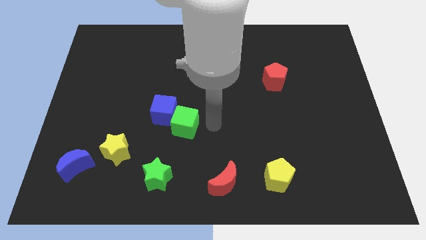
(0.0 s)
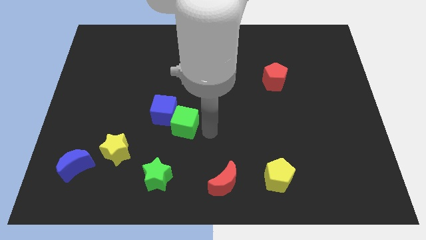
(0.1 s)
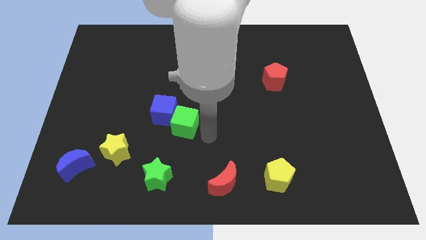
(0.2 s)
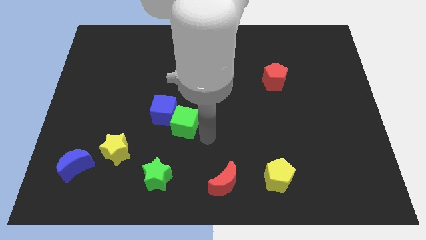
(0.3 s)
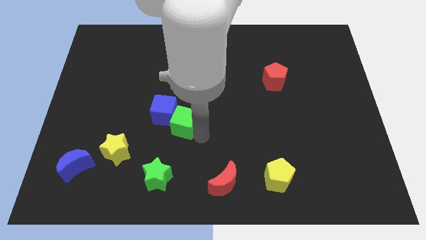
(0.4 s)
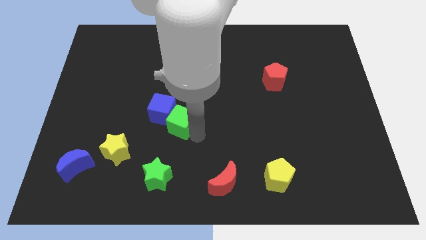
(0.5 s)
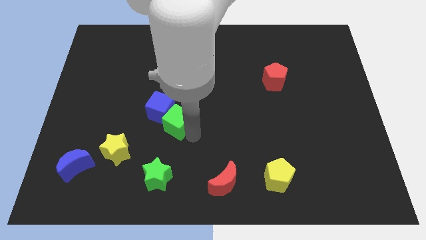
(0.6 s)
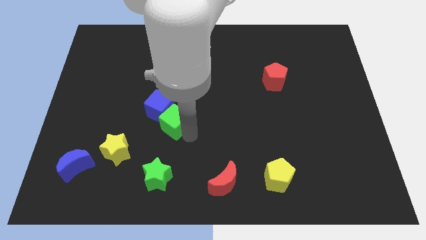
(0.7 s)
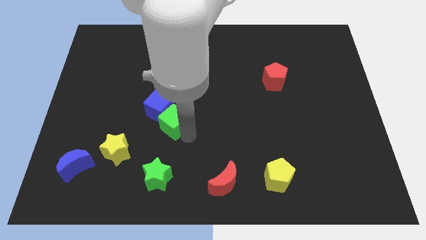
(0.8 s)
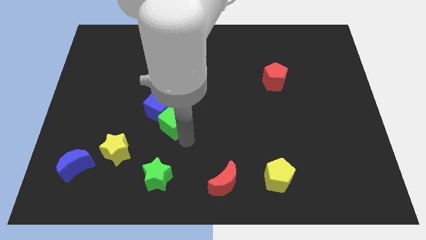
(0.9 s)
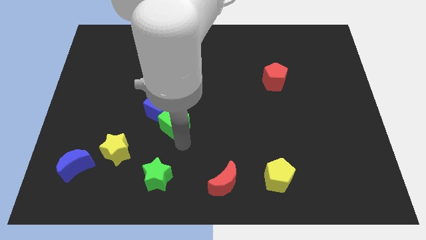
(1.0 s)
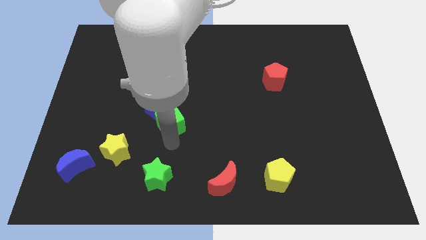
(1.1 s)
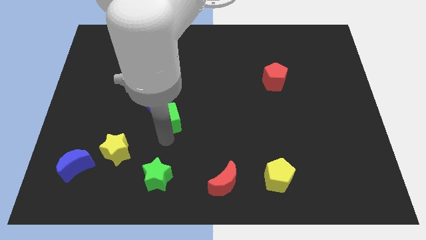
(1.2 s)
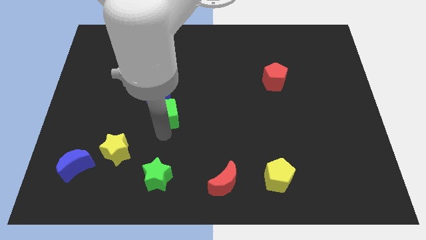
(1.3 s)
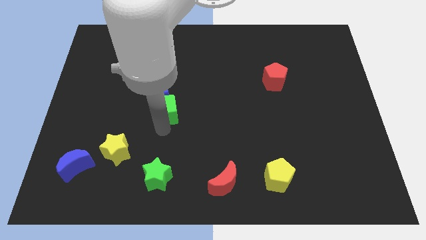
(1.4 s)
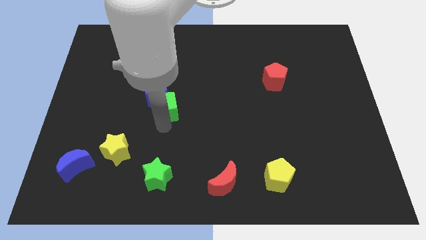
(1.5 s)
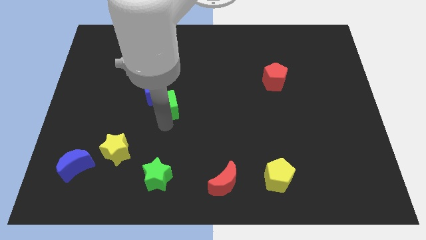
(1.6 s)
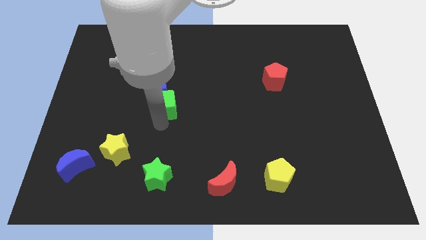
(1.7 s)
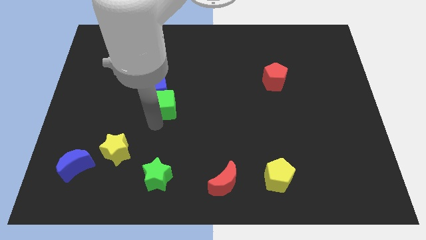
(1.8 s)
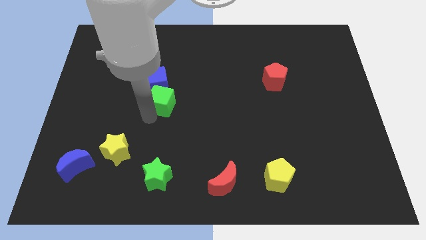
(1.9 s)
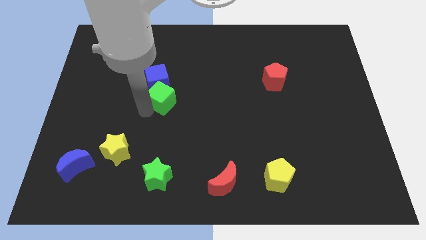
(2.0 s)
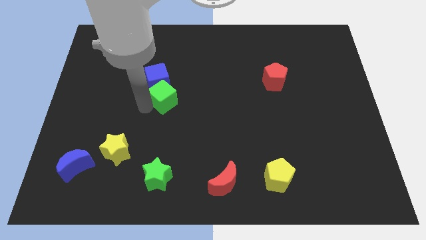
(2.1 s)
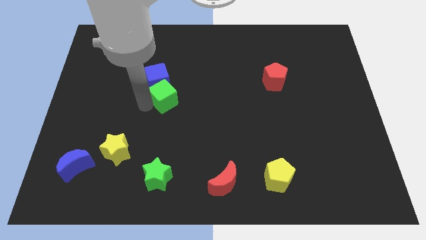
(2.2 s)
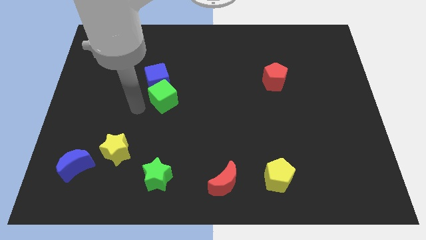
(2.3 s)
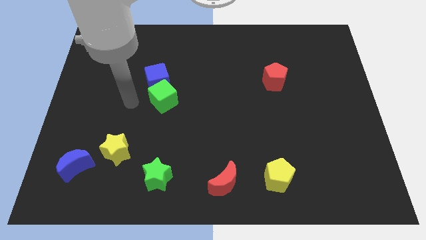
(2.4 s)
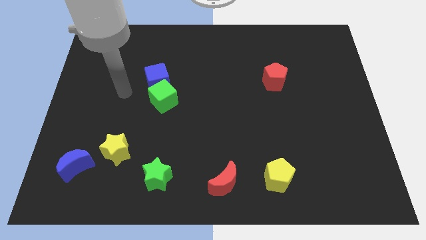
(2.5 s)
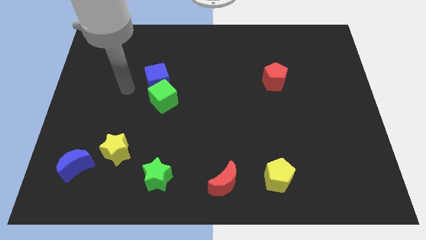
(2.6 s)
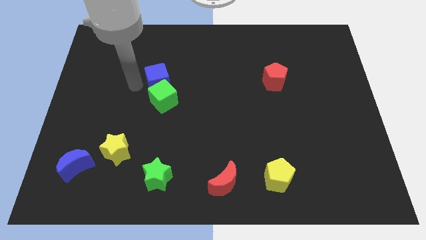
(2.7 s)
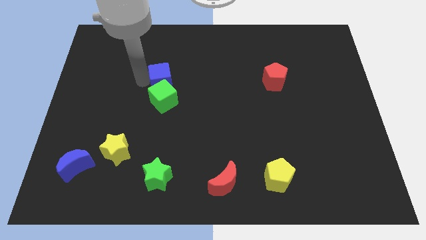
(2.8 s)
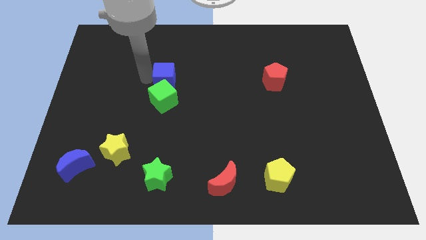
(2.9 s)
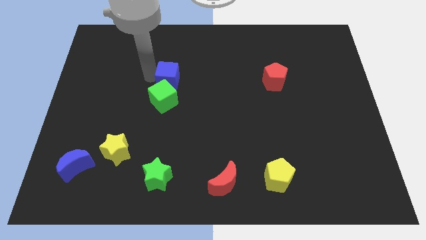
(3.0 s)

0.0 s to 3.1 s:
place both the cubes vertically above the green star

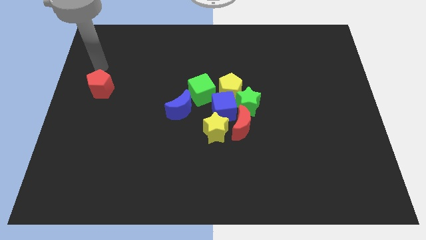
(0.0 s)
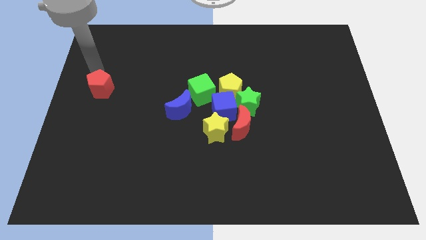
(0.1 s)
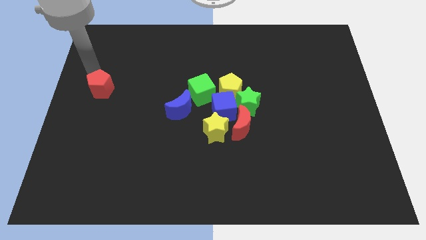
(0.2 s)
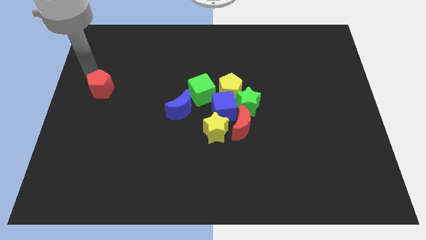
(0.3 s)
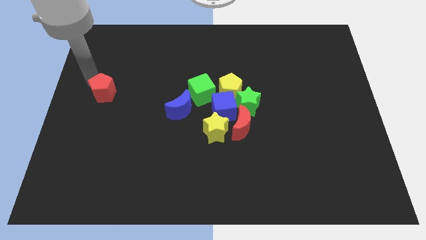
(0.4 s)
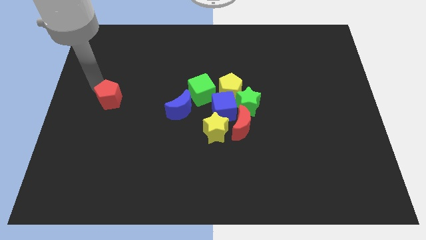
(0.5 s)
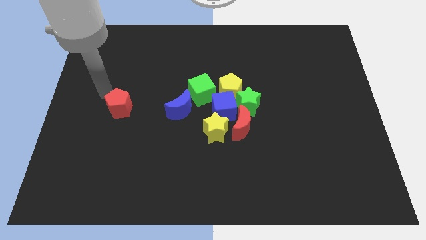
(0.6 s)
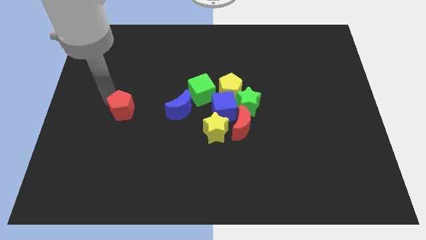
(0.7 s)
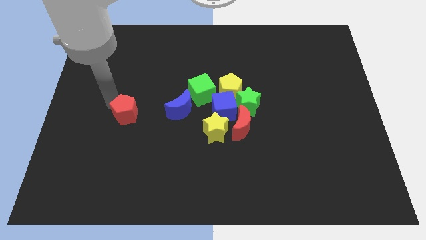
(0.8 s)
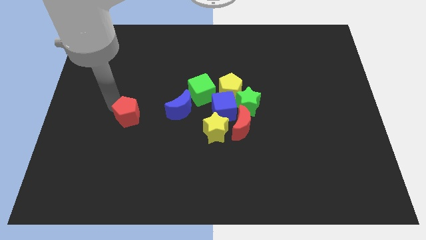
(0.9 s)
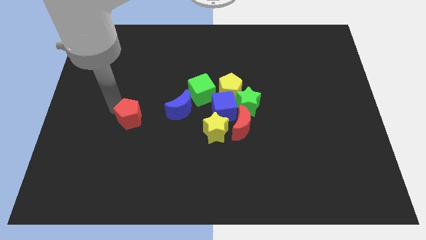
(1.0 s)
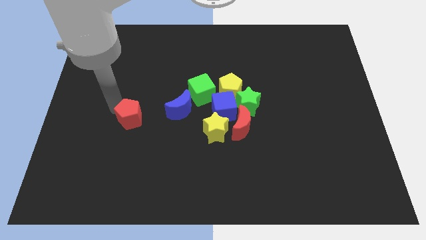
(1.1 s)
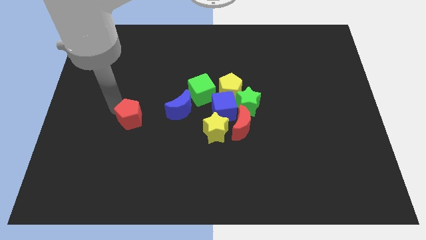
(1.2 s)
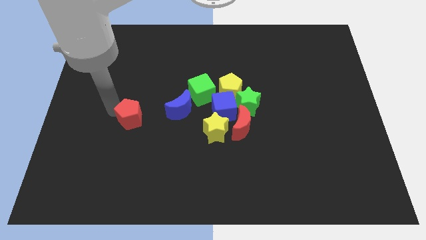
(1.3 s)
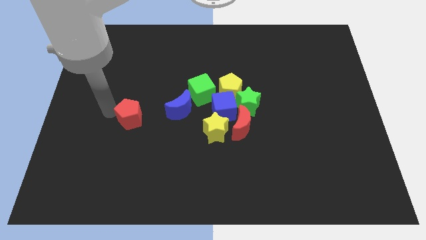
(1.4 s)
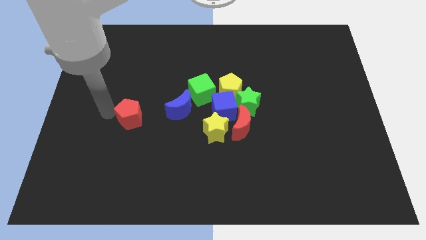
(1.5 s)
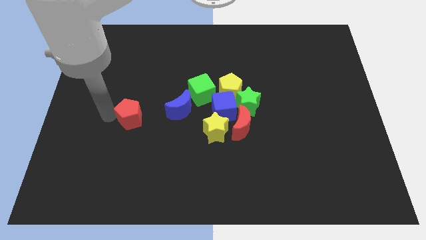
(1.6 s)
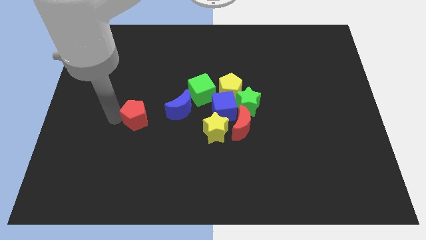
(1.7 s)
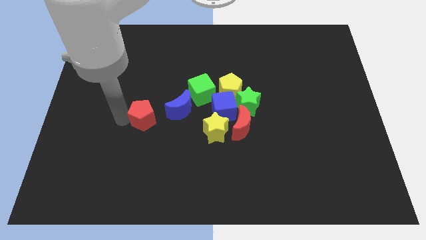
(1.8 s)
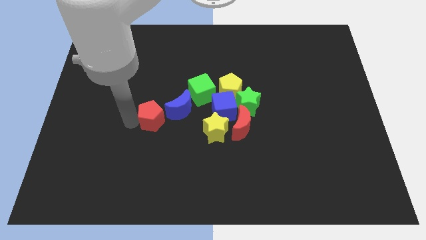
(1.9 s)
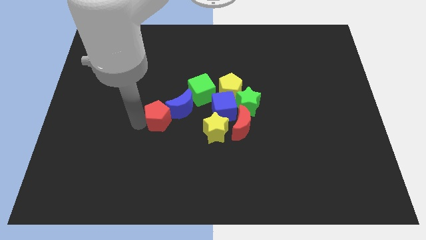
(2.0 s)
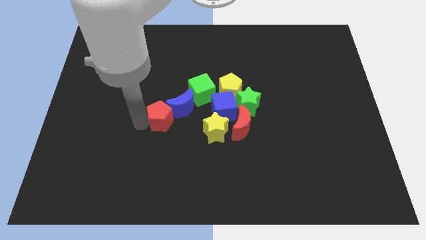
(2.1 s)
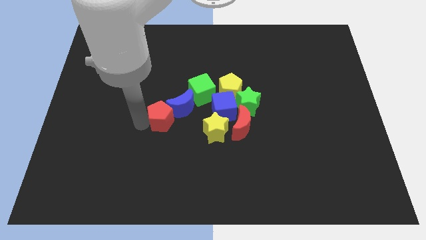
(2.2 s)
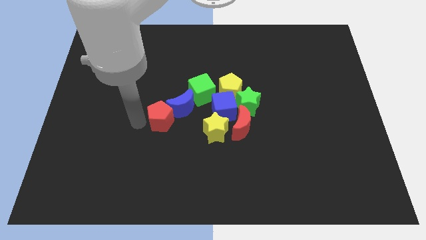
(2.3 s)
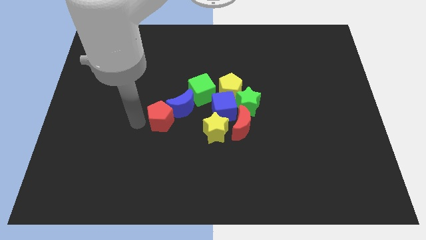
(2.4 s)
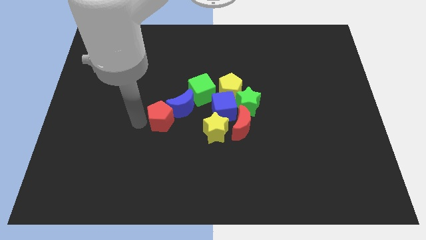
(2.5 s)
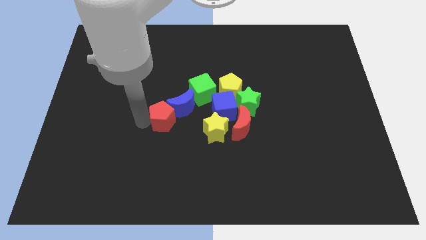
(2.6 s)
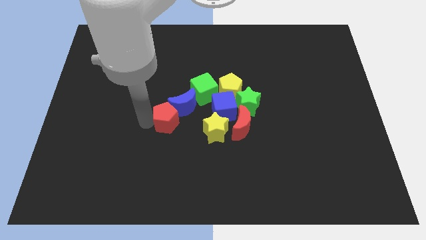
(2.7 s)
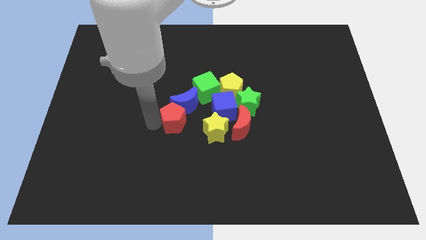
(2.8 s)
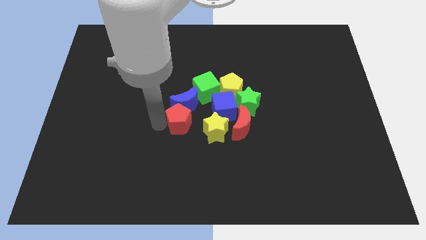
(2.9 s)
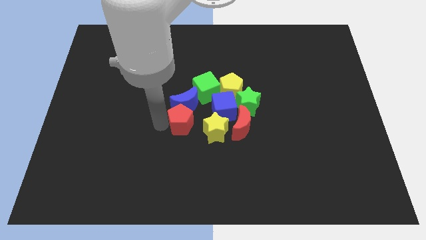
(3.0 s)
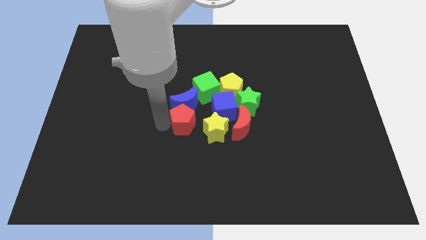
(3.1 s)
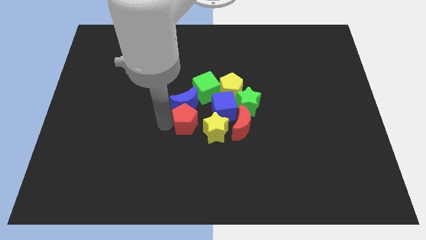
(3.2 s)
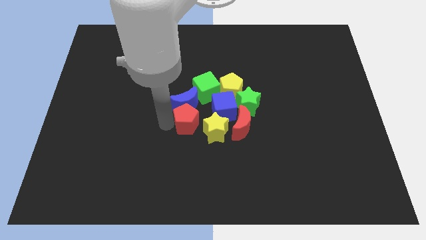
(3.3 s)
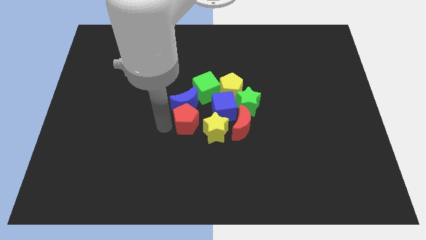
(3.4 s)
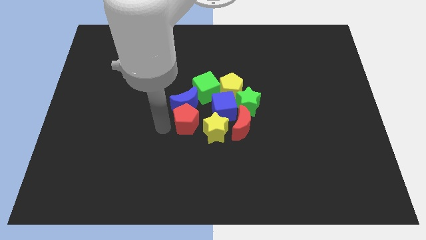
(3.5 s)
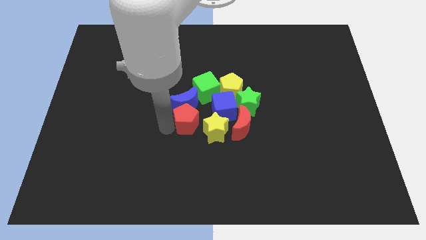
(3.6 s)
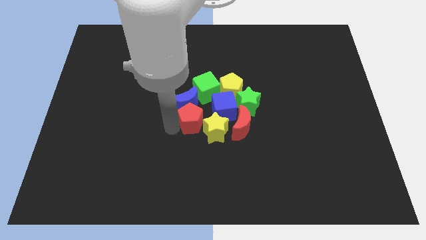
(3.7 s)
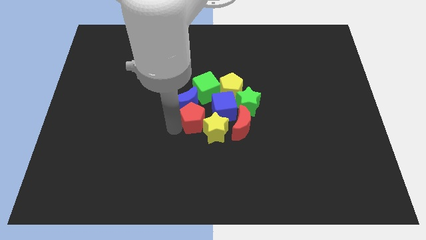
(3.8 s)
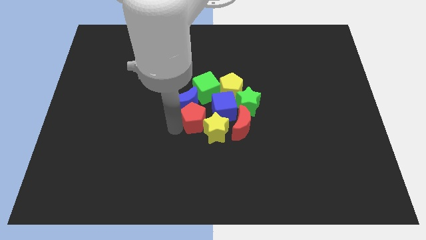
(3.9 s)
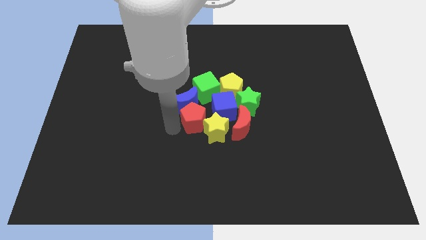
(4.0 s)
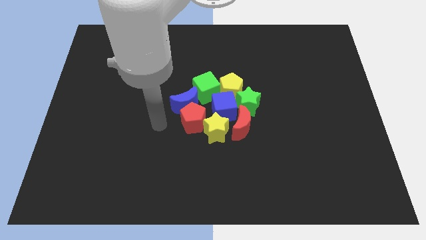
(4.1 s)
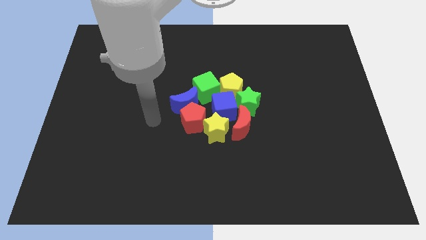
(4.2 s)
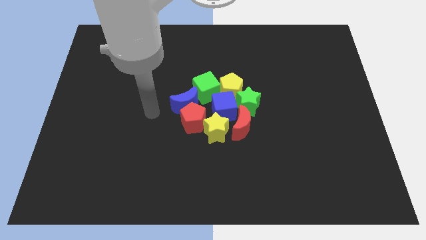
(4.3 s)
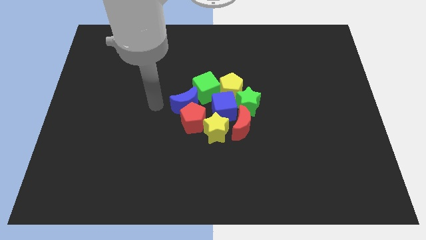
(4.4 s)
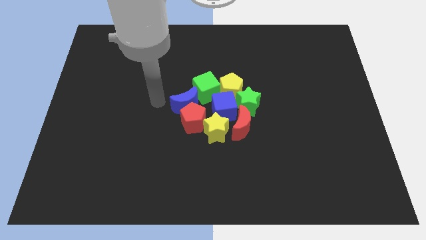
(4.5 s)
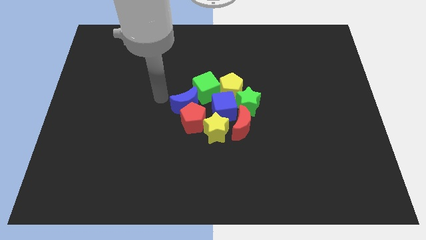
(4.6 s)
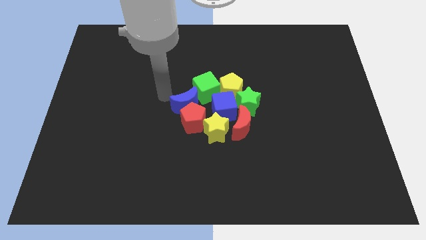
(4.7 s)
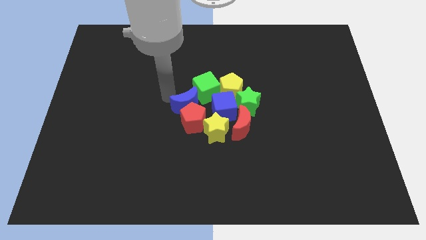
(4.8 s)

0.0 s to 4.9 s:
place red pentagon to the top left of yellow star

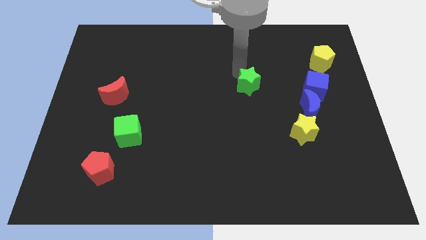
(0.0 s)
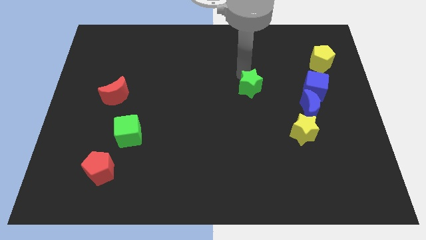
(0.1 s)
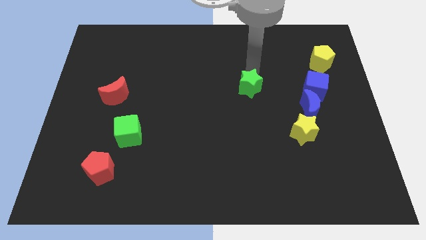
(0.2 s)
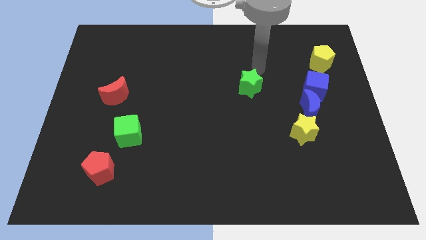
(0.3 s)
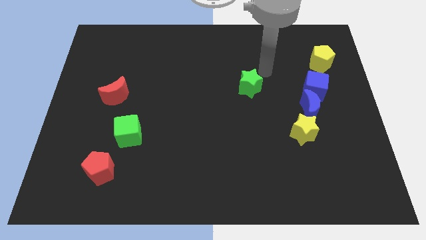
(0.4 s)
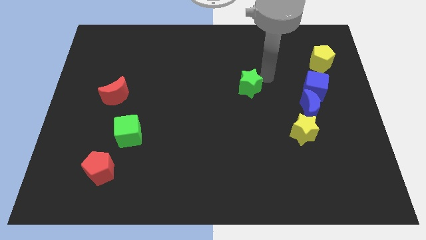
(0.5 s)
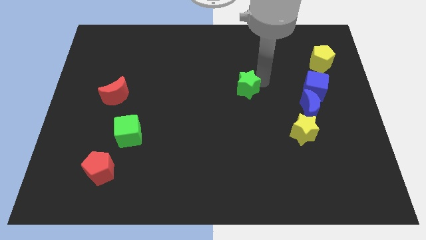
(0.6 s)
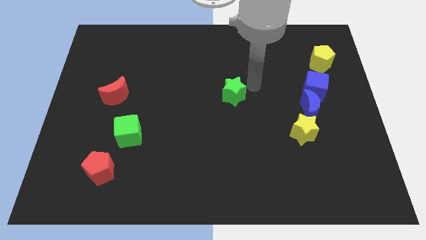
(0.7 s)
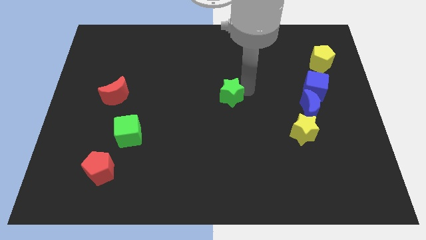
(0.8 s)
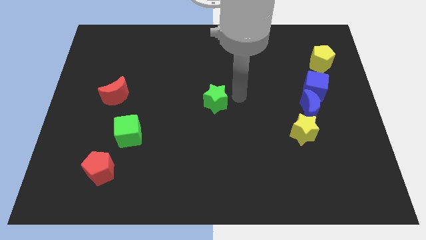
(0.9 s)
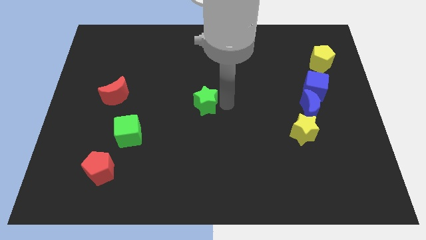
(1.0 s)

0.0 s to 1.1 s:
move green star at the center

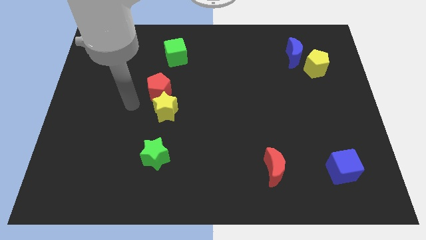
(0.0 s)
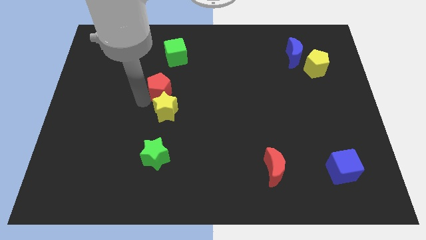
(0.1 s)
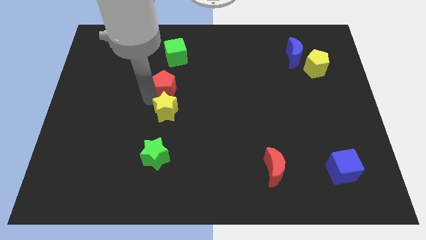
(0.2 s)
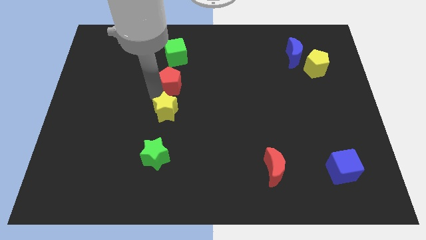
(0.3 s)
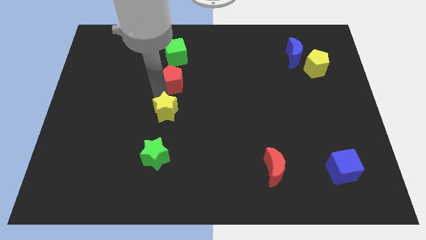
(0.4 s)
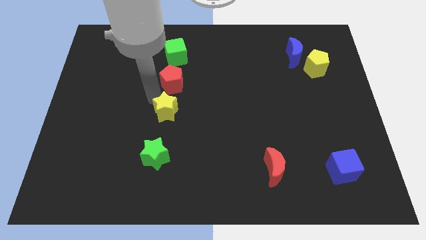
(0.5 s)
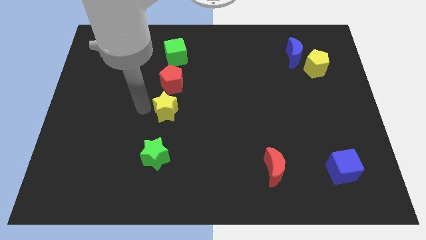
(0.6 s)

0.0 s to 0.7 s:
place the red pentagon below the green cube
